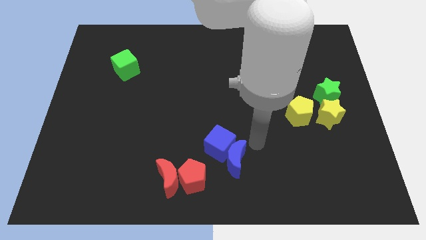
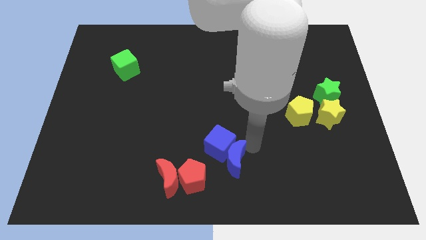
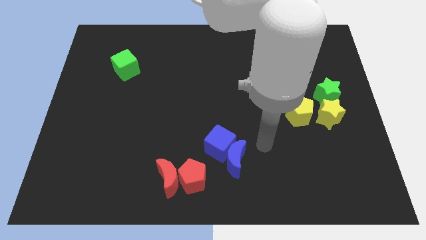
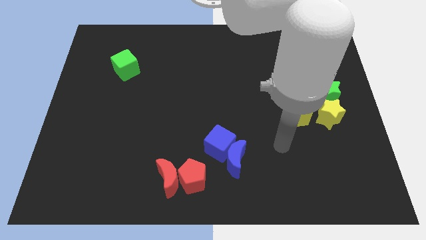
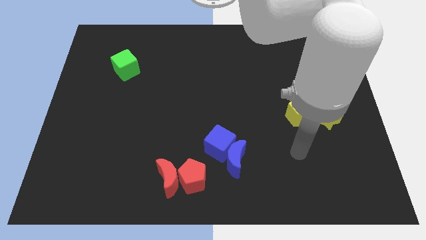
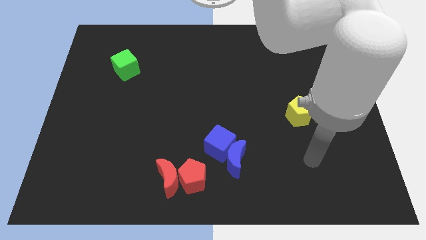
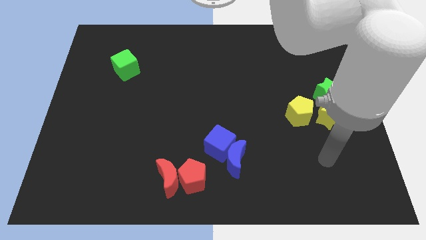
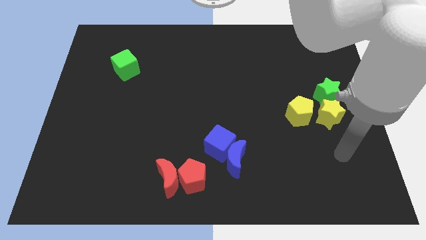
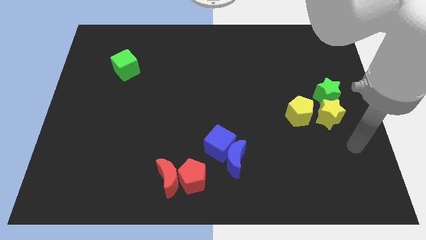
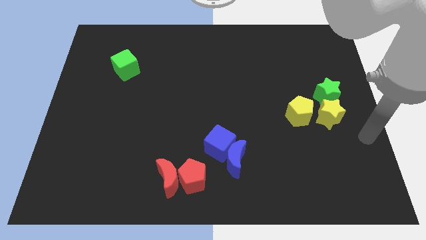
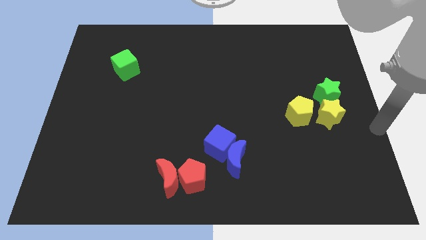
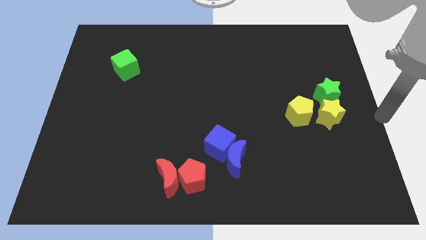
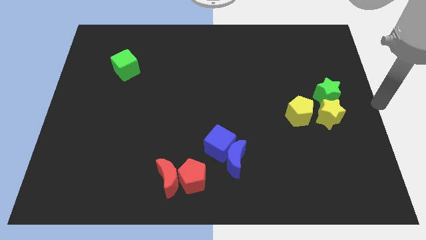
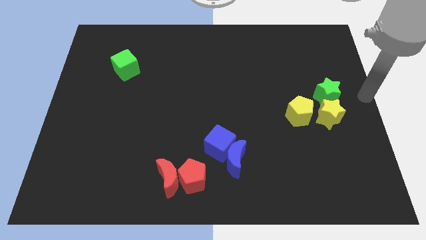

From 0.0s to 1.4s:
put your arm parallel right to the green star

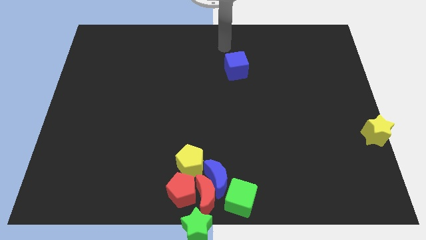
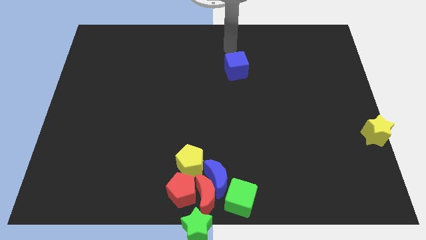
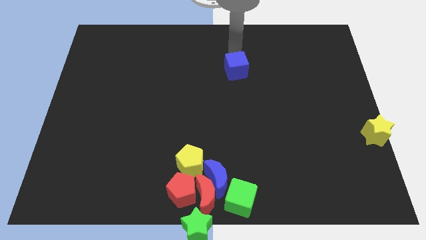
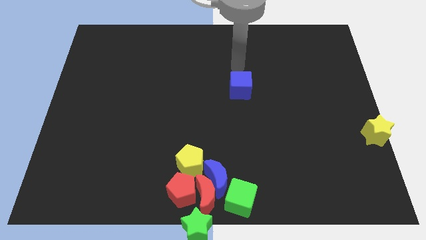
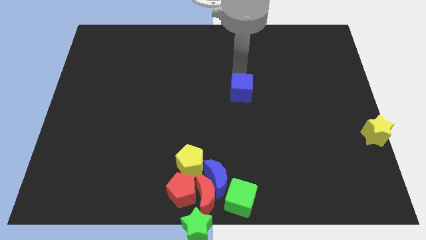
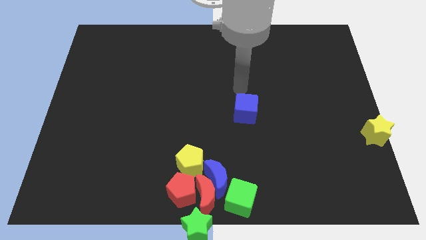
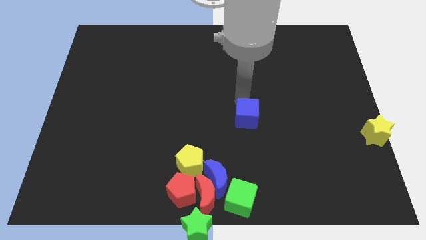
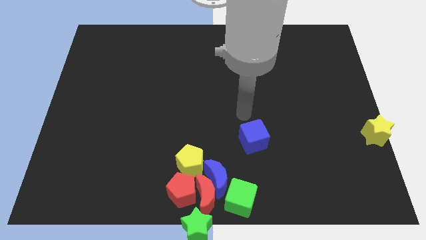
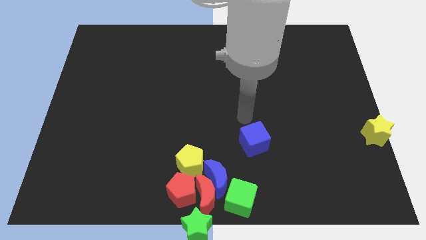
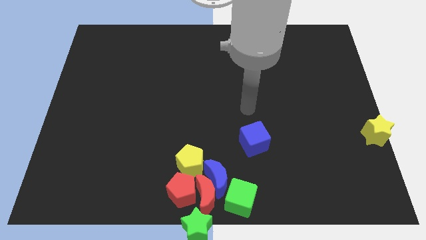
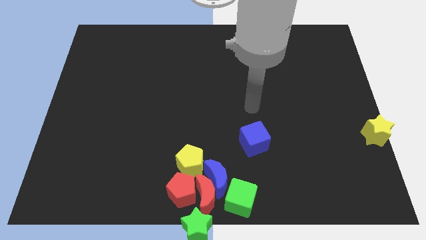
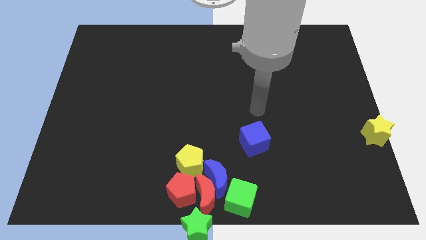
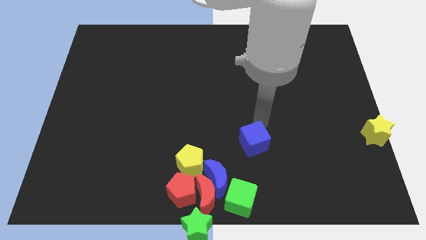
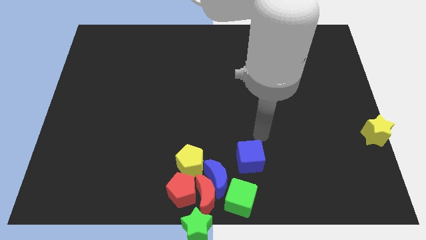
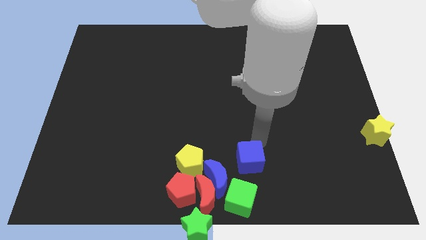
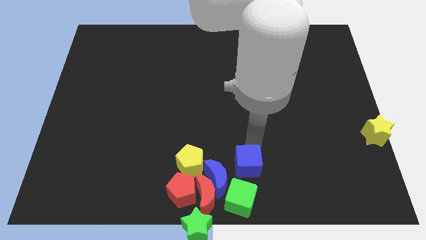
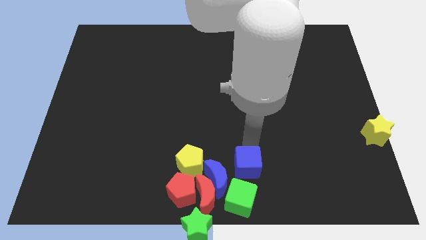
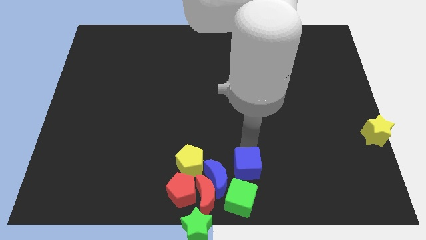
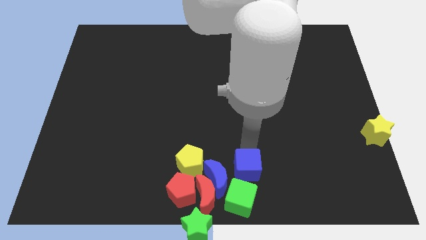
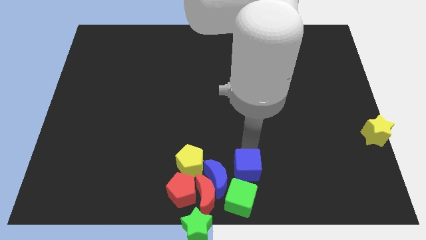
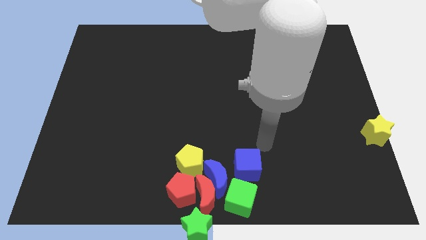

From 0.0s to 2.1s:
move the blue cube towards the green cube

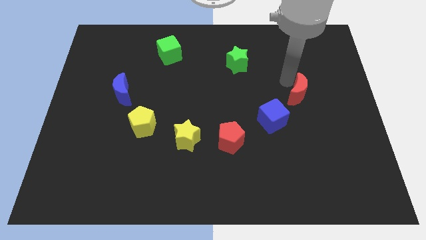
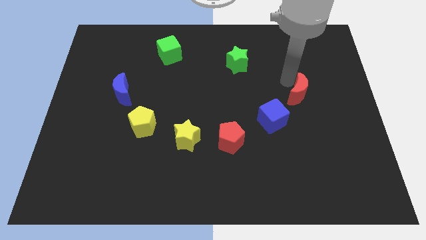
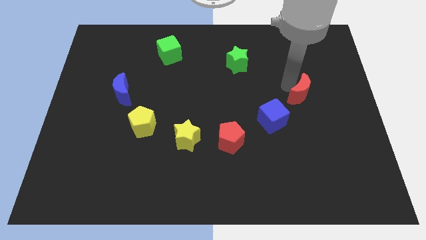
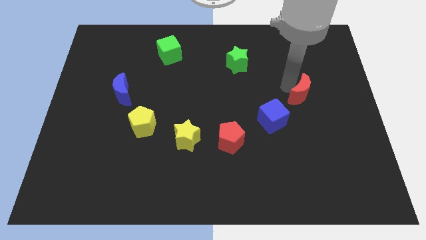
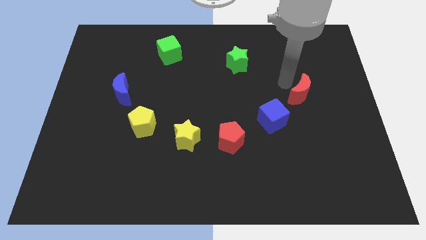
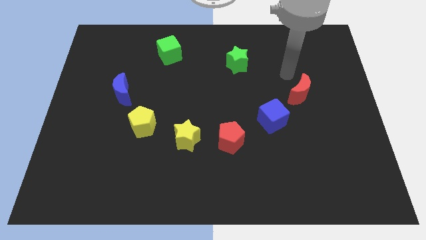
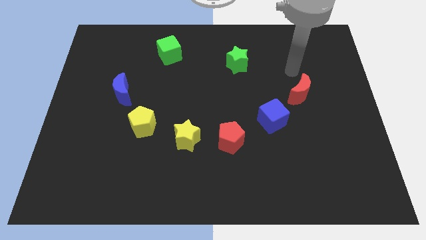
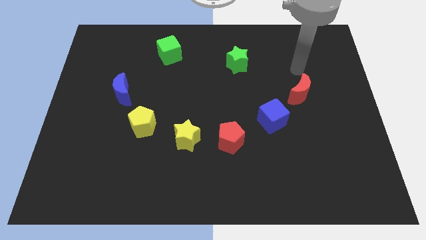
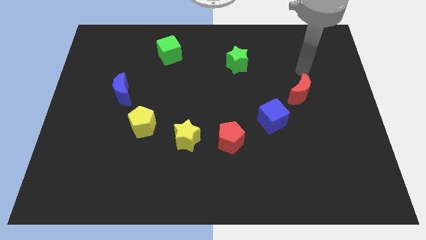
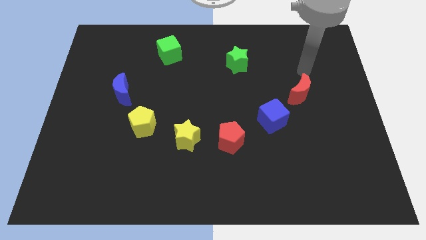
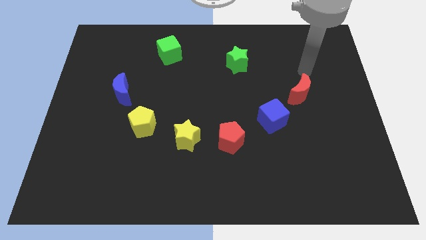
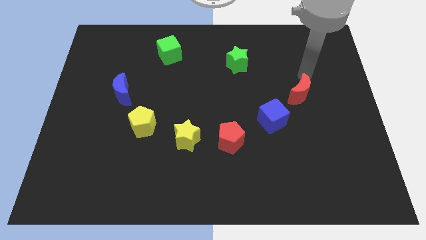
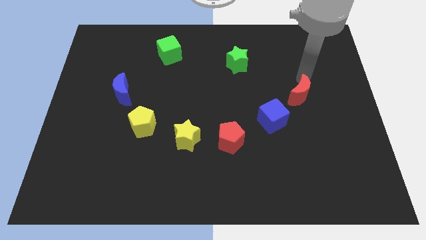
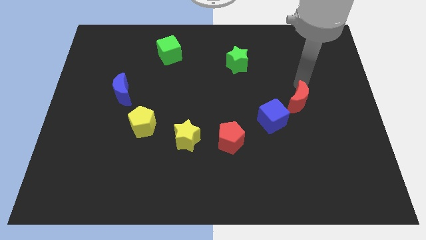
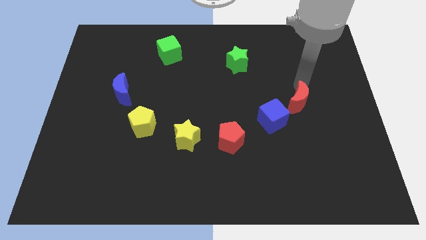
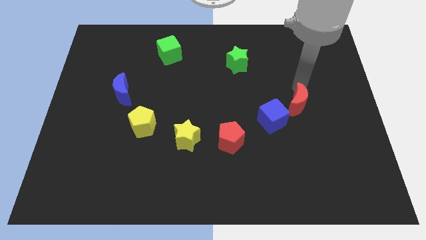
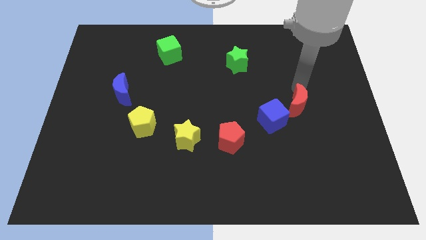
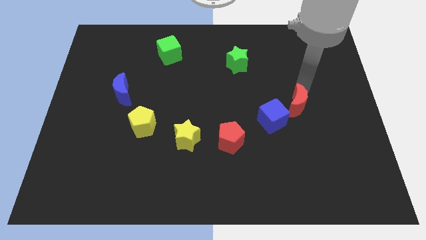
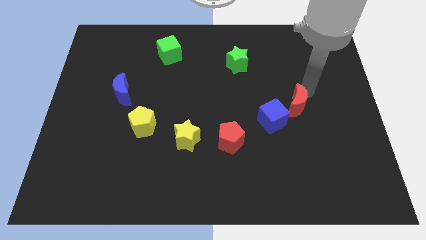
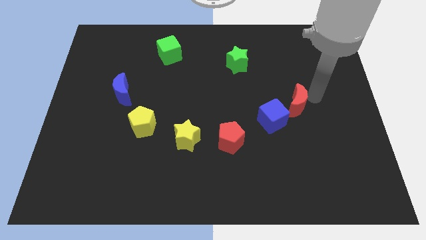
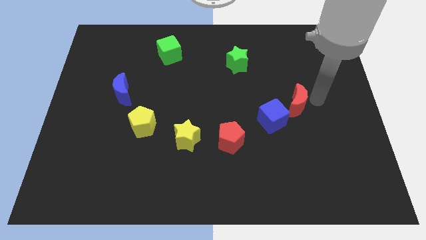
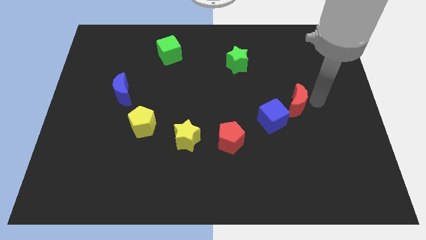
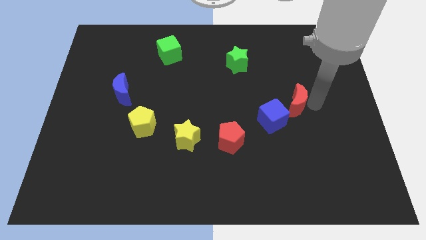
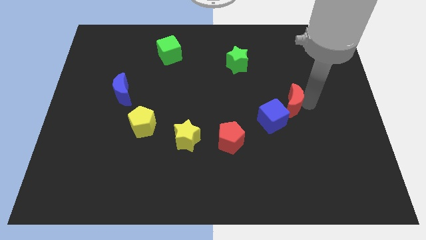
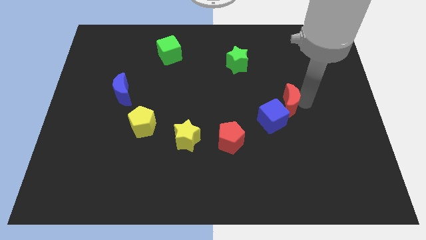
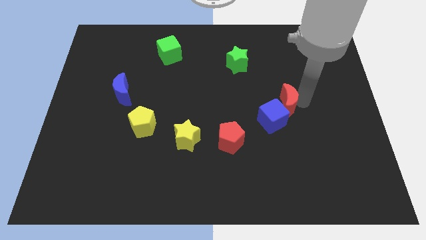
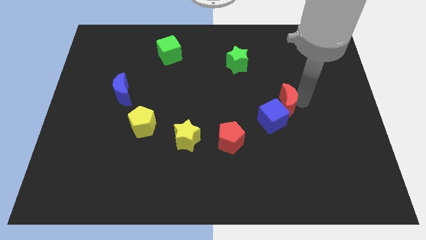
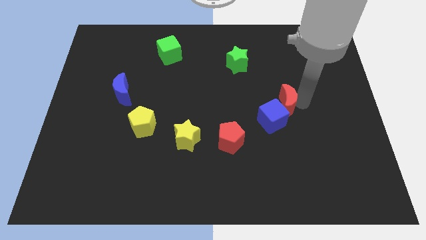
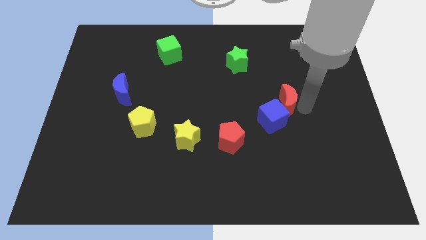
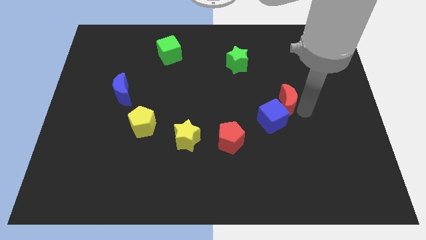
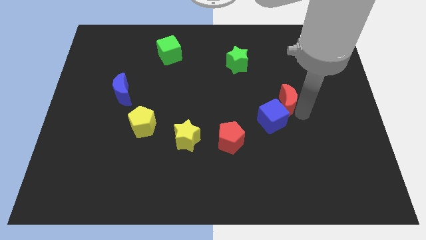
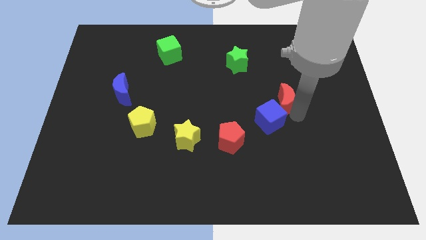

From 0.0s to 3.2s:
push the red moon into the blue cube

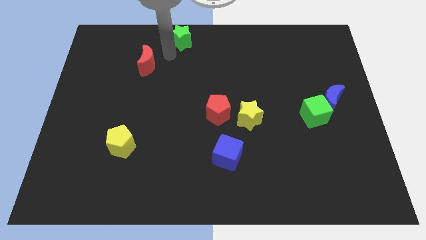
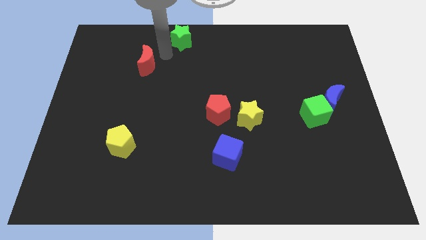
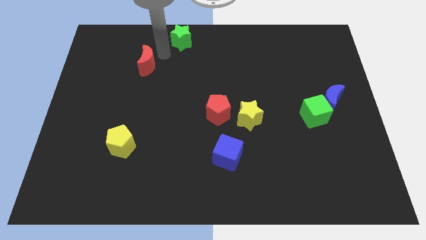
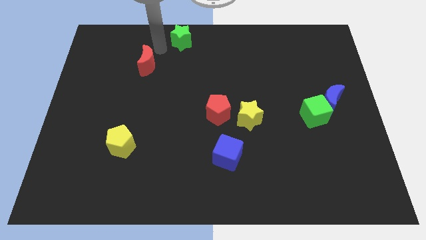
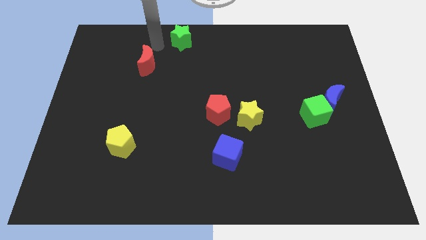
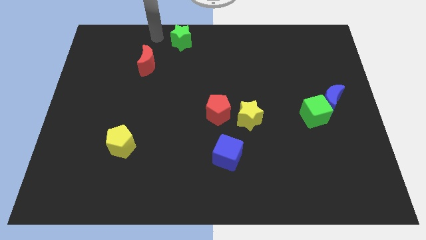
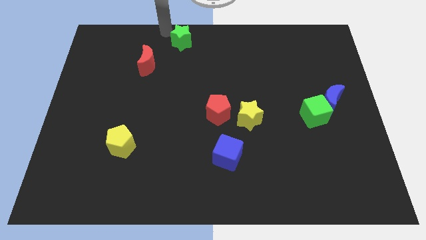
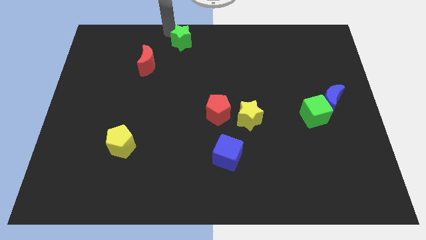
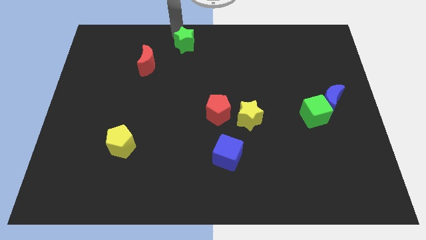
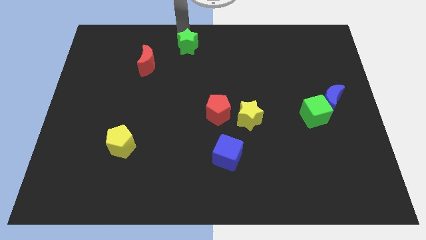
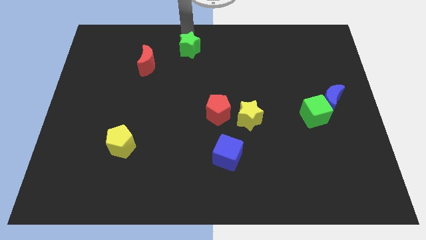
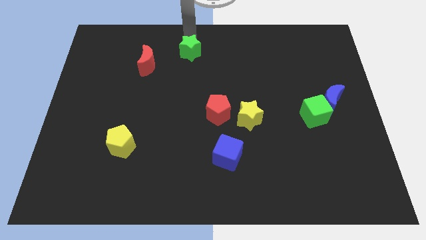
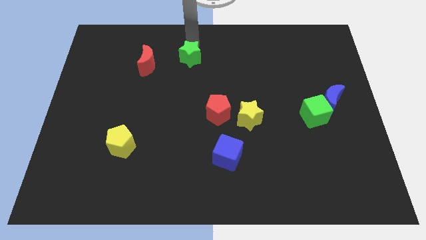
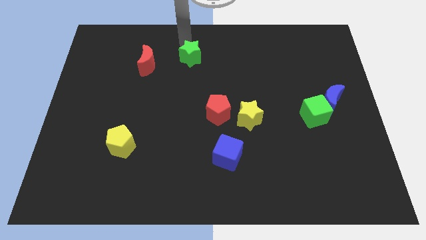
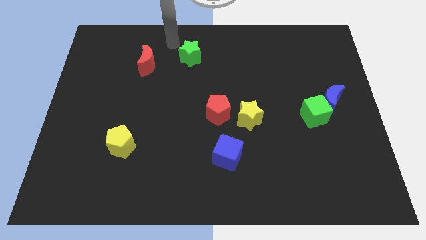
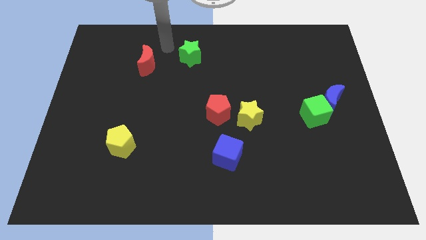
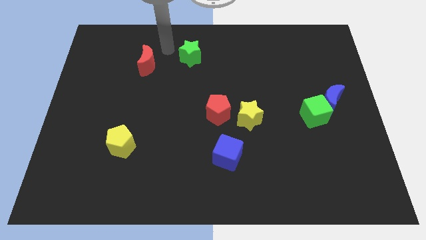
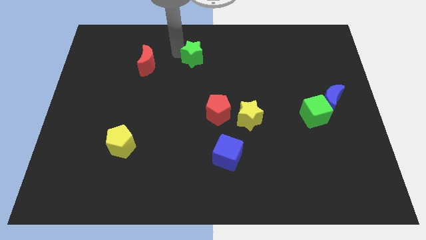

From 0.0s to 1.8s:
move the green star to the right of the red crescent

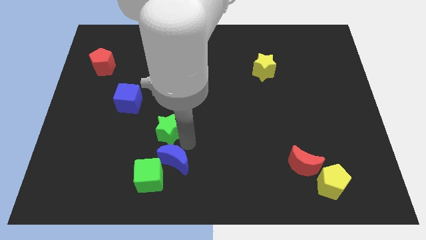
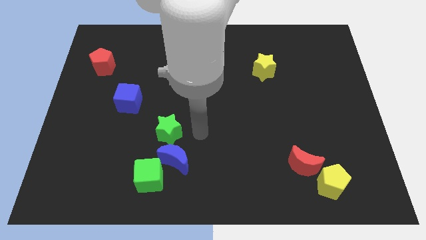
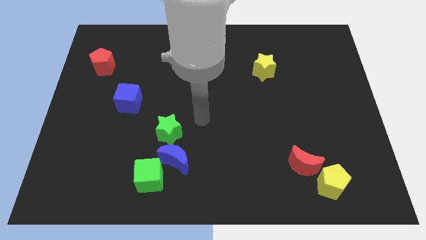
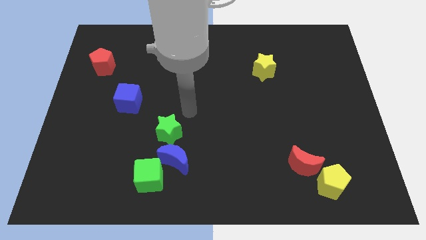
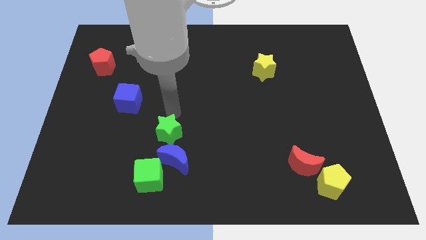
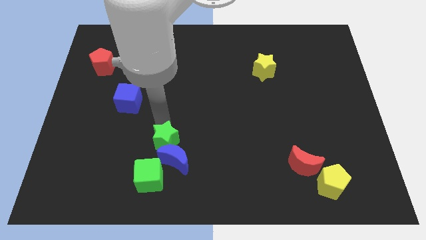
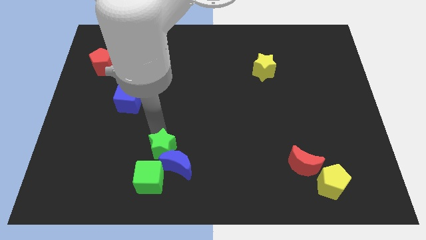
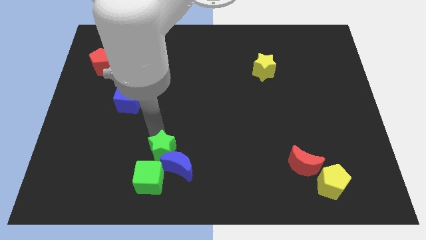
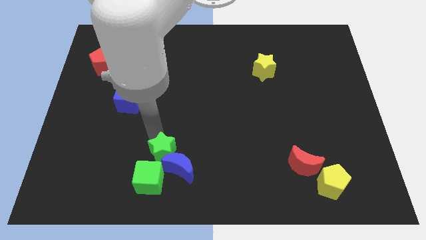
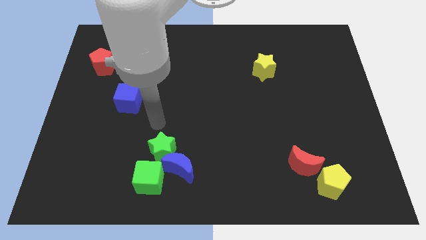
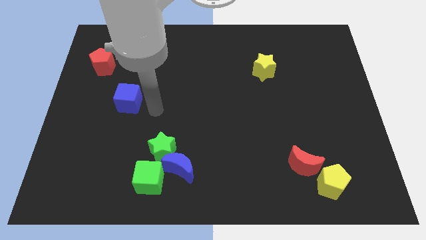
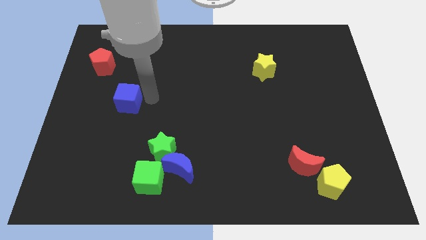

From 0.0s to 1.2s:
push the green star into the blue moon
